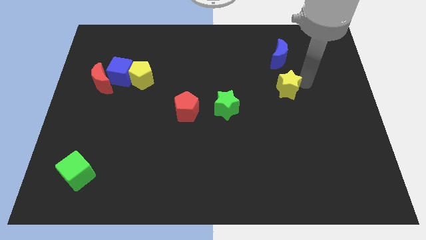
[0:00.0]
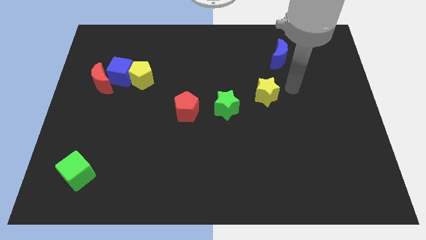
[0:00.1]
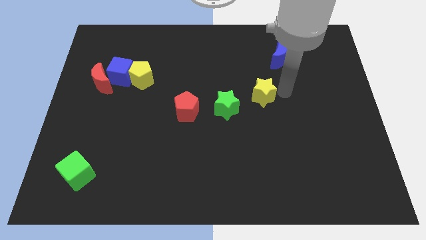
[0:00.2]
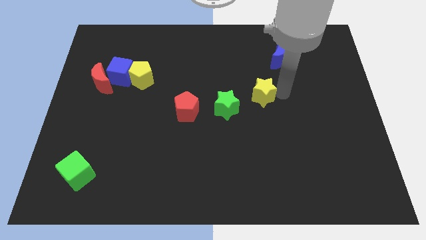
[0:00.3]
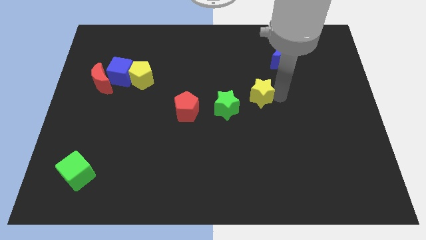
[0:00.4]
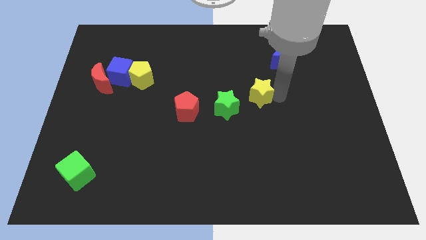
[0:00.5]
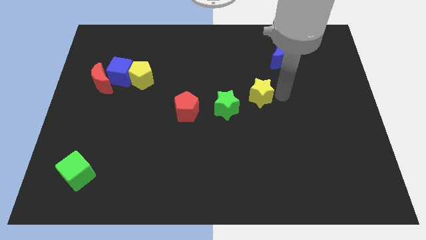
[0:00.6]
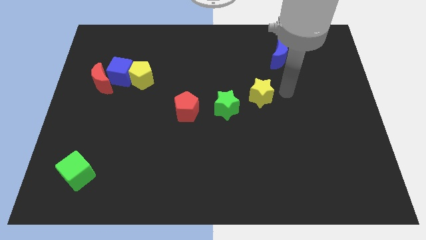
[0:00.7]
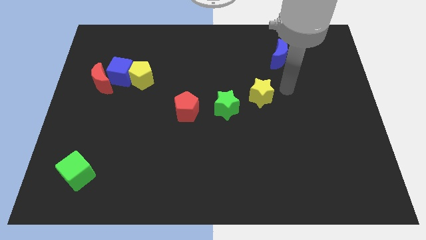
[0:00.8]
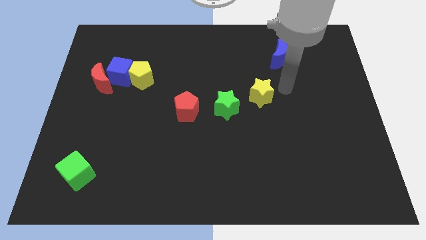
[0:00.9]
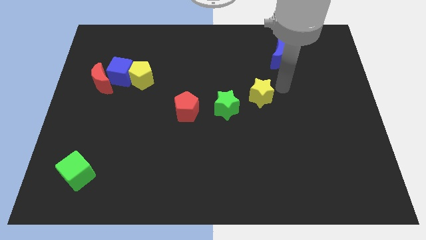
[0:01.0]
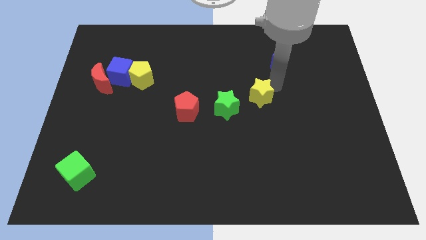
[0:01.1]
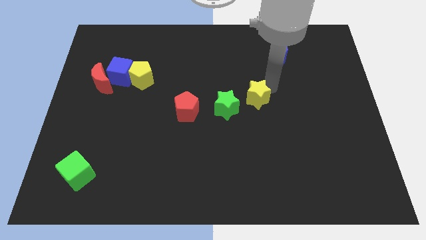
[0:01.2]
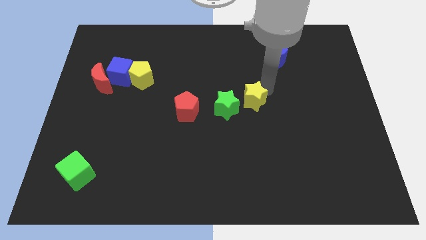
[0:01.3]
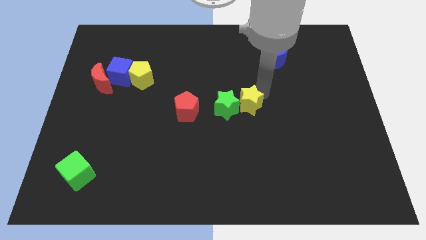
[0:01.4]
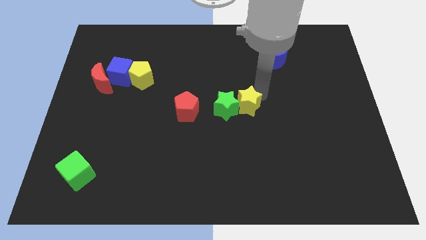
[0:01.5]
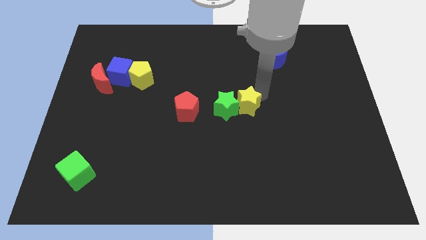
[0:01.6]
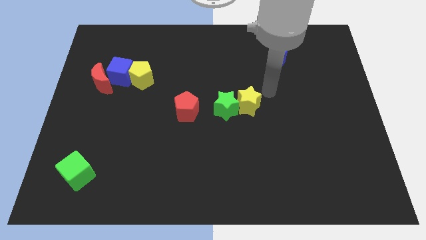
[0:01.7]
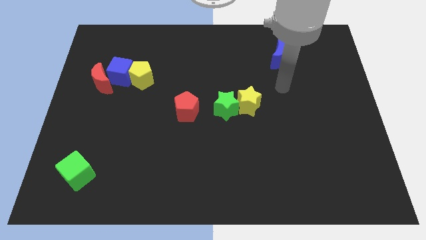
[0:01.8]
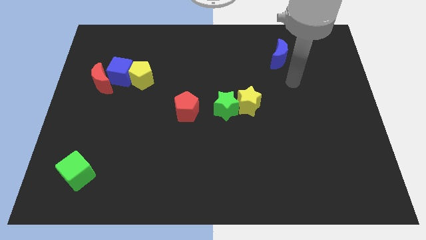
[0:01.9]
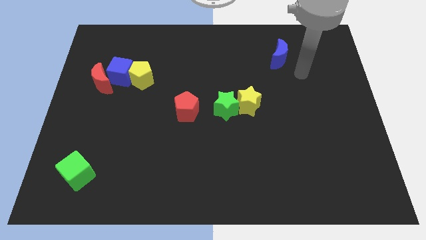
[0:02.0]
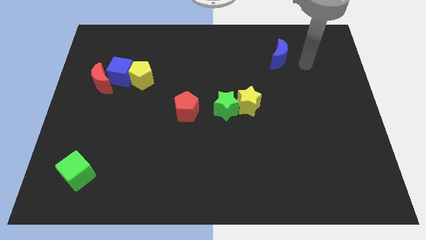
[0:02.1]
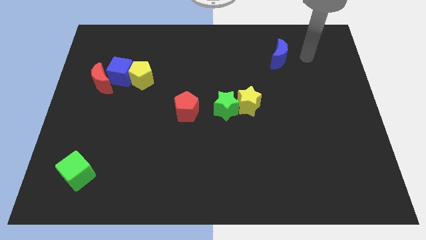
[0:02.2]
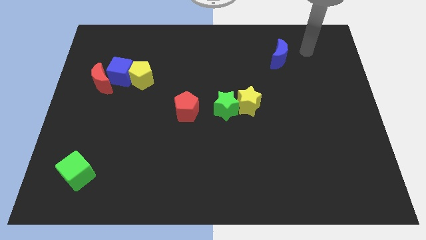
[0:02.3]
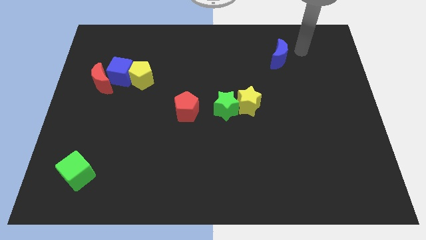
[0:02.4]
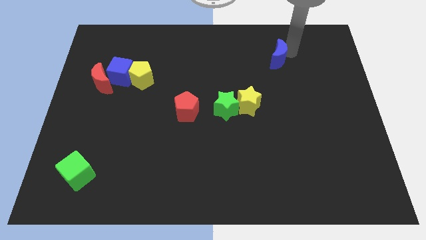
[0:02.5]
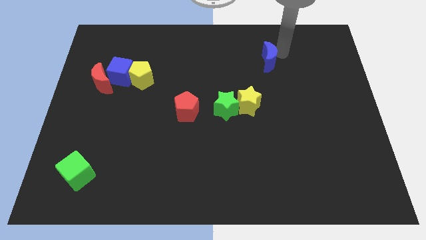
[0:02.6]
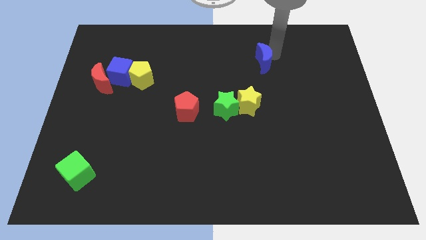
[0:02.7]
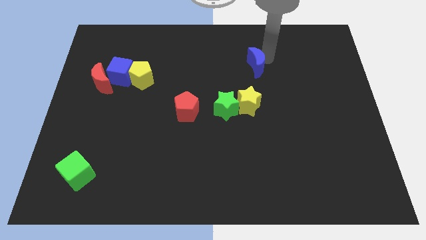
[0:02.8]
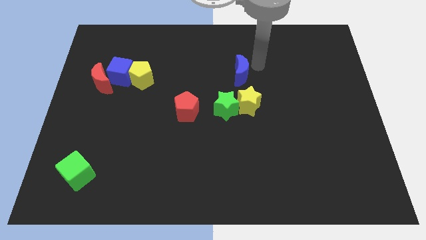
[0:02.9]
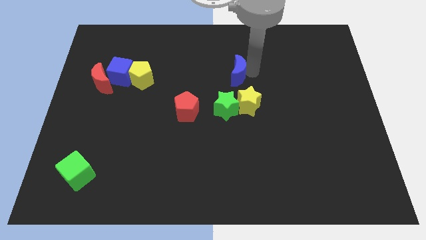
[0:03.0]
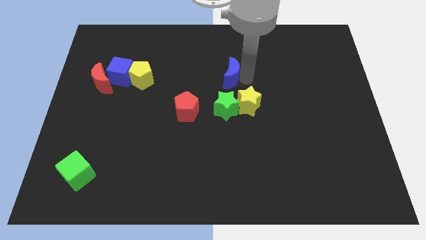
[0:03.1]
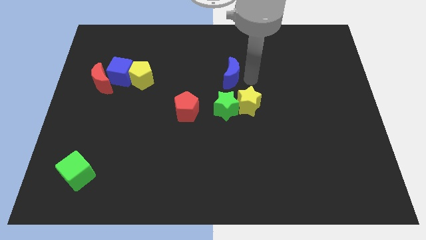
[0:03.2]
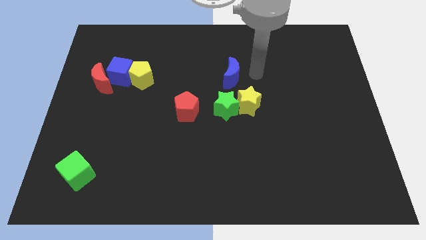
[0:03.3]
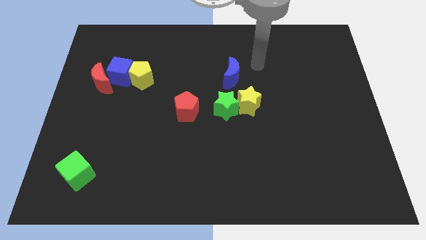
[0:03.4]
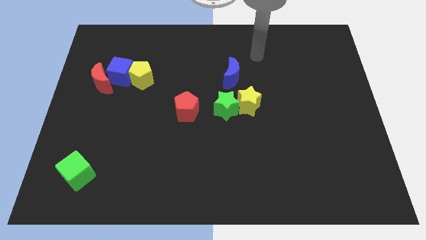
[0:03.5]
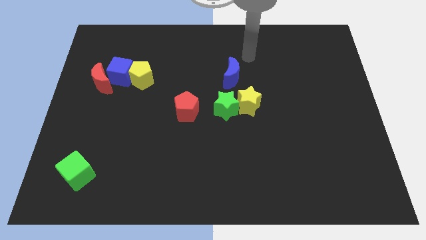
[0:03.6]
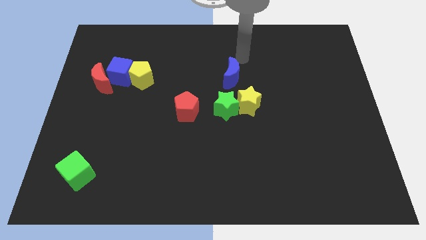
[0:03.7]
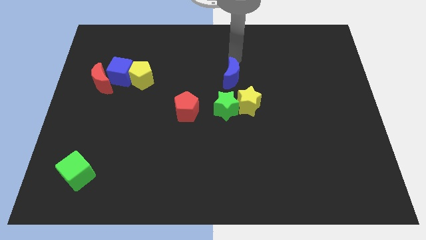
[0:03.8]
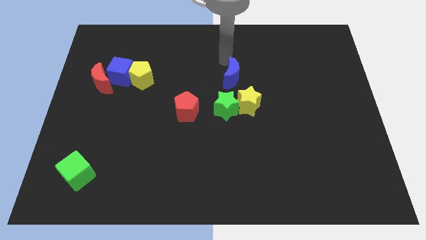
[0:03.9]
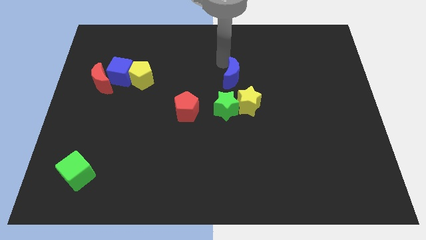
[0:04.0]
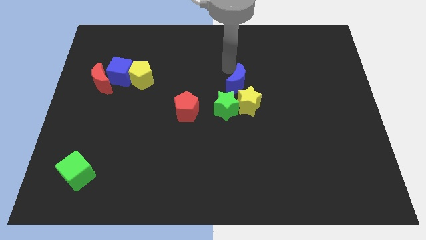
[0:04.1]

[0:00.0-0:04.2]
push the yellow star towards the green star

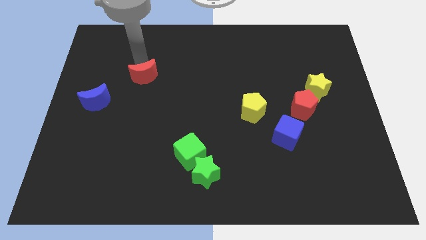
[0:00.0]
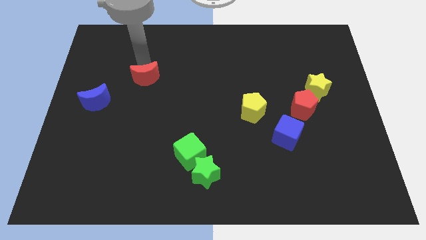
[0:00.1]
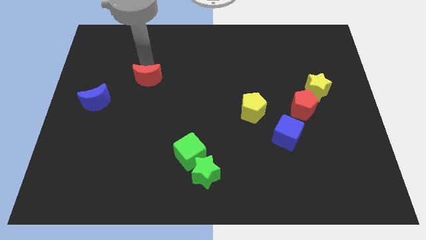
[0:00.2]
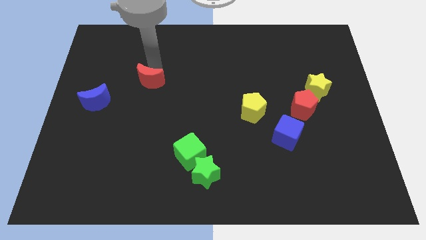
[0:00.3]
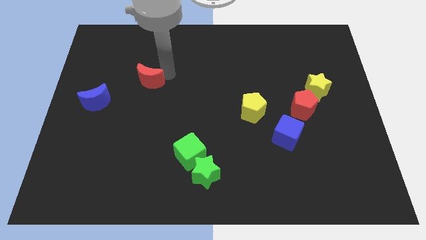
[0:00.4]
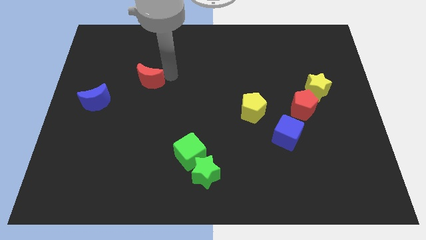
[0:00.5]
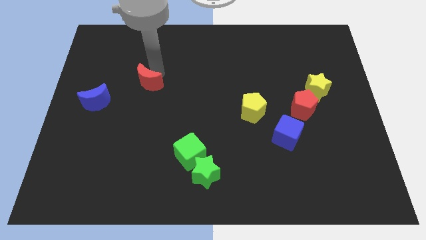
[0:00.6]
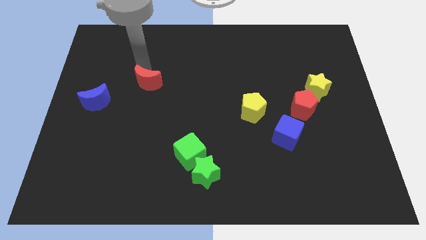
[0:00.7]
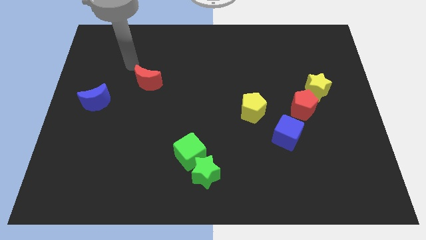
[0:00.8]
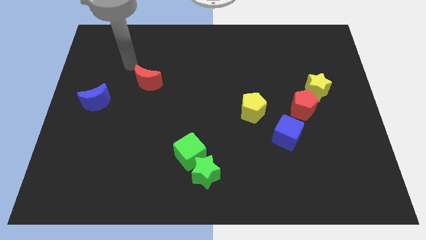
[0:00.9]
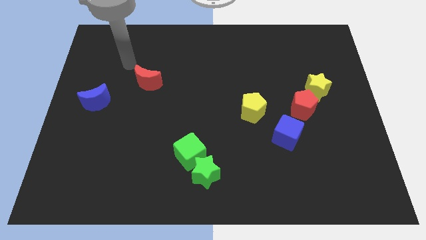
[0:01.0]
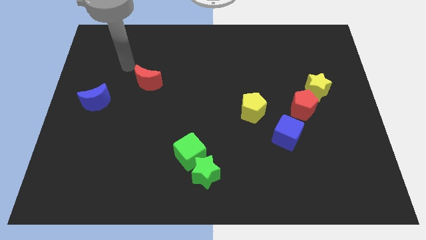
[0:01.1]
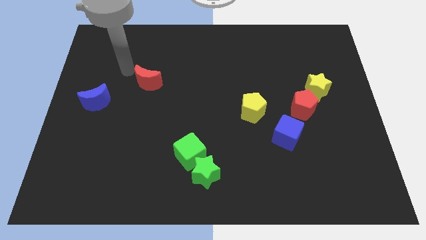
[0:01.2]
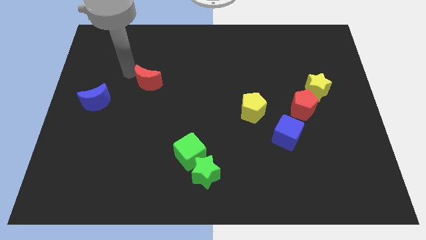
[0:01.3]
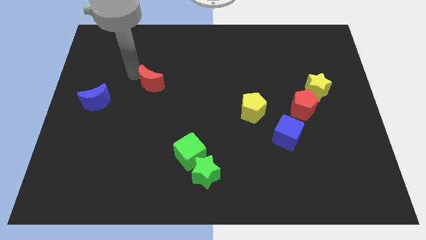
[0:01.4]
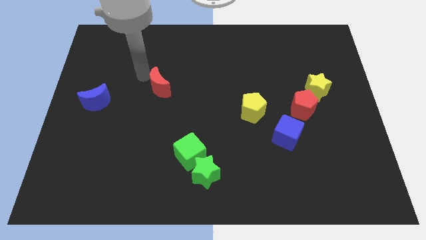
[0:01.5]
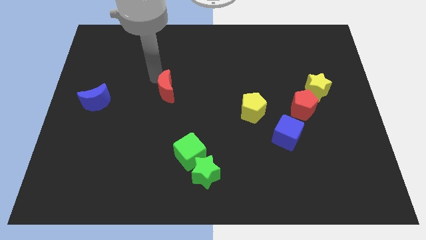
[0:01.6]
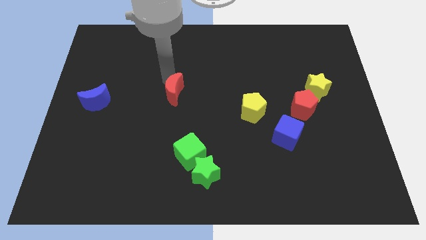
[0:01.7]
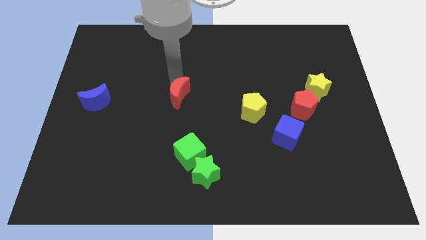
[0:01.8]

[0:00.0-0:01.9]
push the red moon towards the bottom

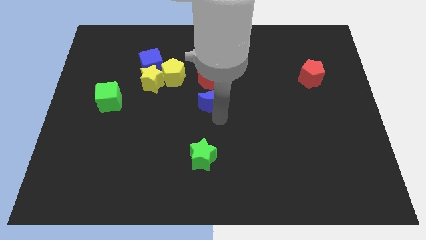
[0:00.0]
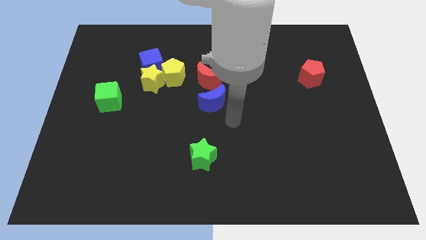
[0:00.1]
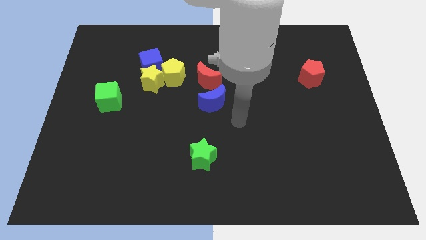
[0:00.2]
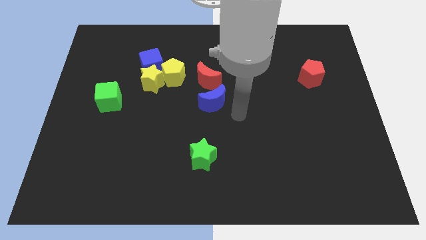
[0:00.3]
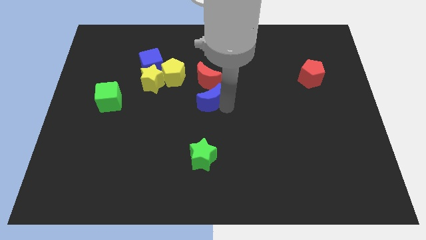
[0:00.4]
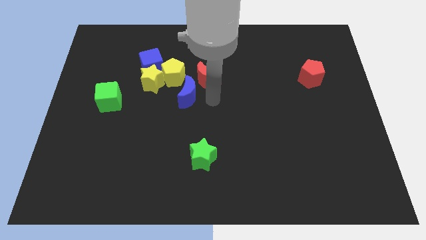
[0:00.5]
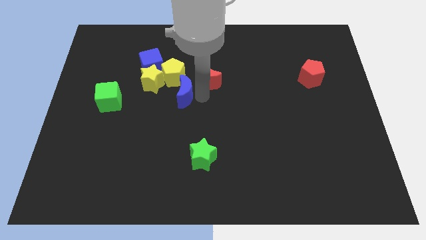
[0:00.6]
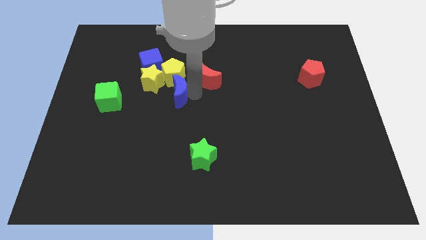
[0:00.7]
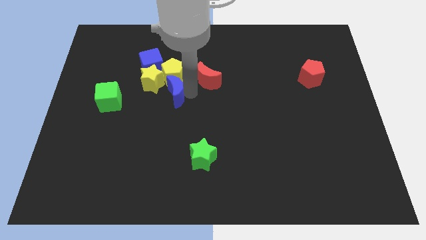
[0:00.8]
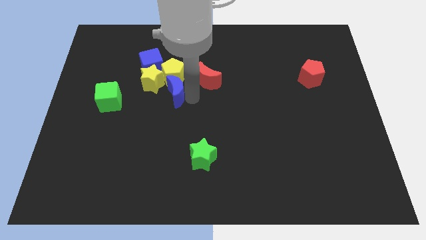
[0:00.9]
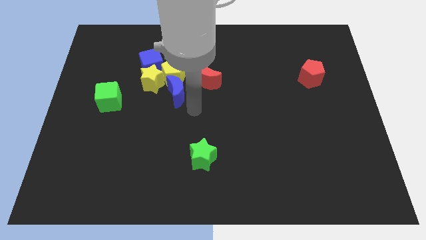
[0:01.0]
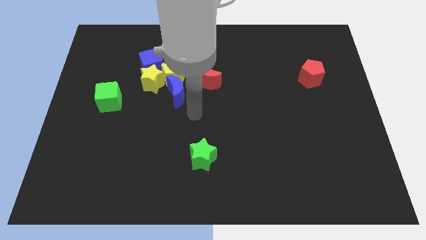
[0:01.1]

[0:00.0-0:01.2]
push the blue crescent into the yellow pentagon

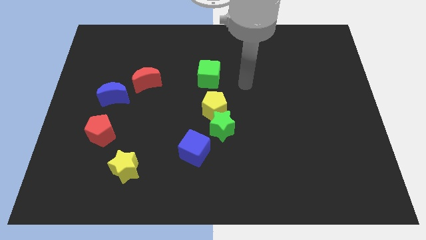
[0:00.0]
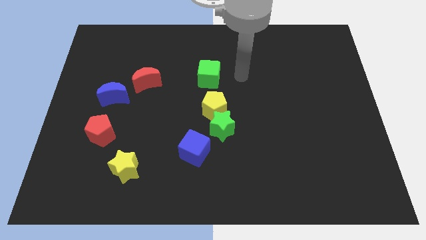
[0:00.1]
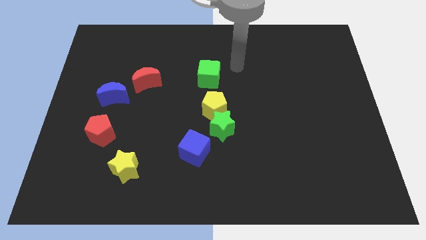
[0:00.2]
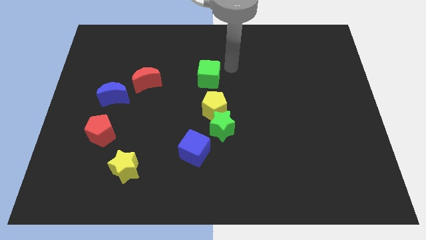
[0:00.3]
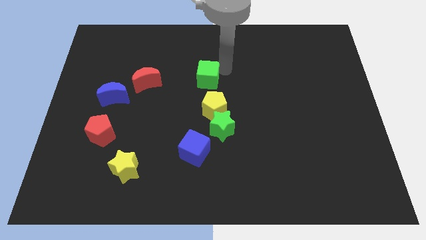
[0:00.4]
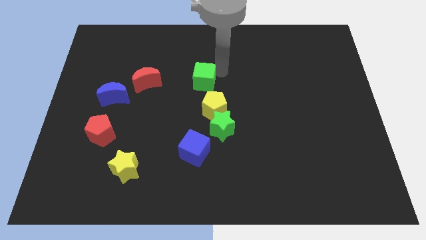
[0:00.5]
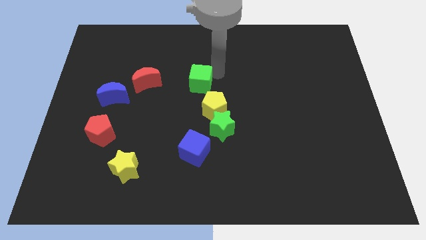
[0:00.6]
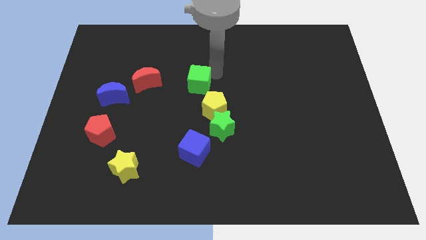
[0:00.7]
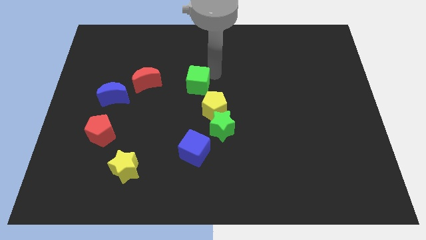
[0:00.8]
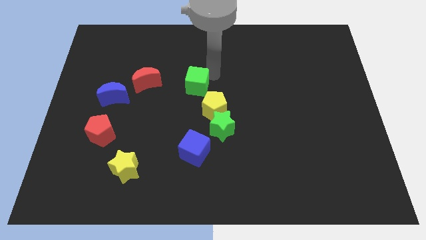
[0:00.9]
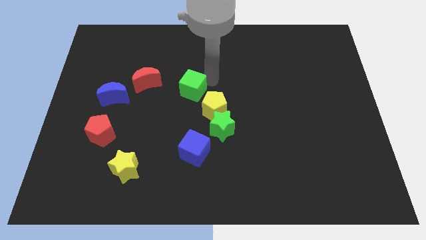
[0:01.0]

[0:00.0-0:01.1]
slide the green cube slightly down to the left

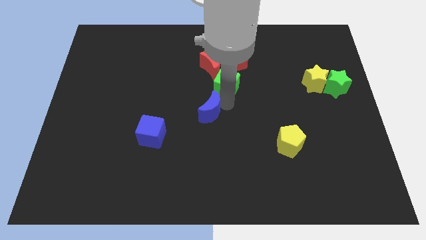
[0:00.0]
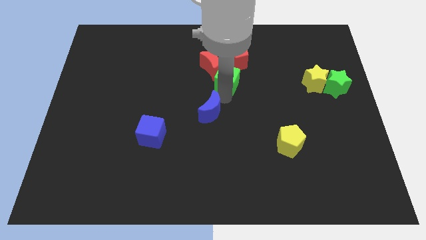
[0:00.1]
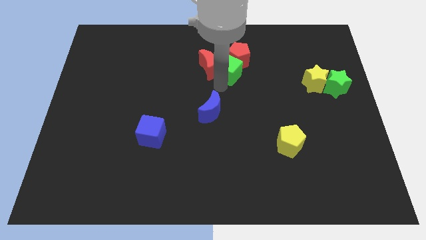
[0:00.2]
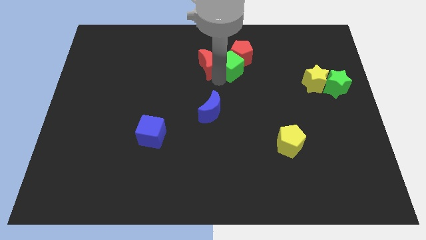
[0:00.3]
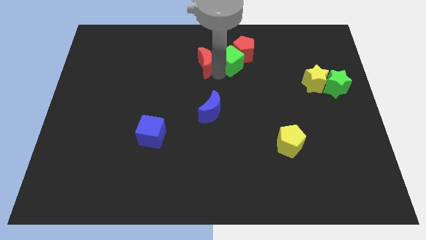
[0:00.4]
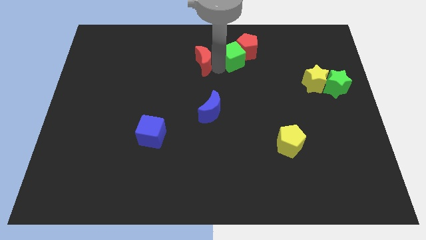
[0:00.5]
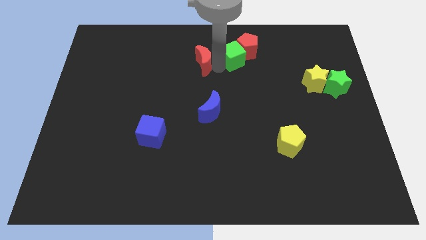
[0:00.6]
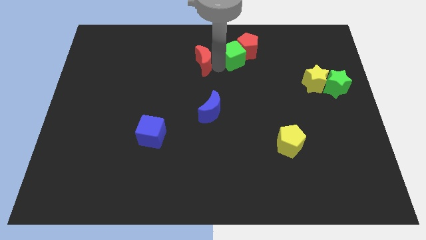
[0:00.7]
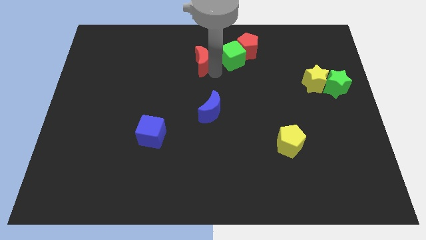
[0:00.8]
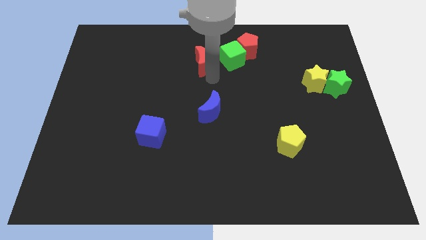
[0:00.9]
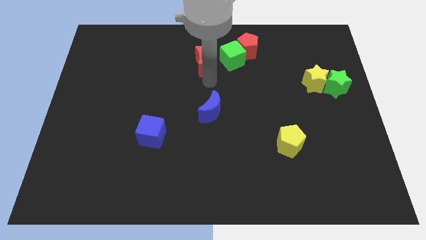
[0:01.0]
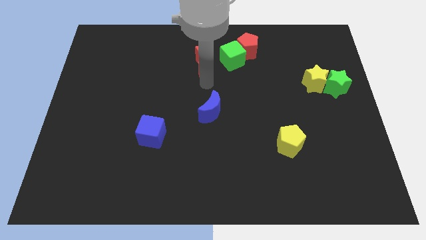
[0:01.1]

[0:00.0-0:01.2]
move green cube to the left of the red pentagon
